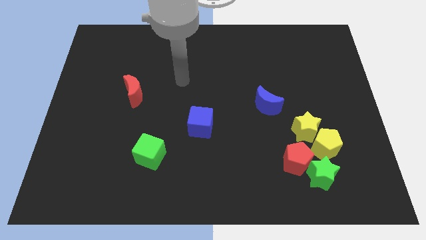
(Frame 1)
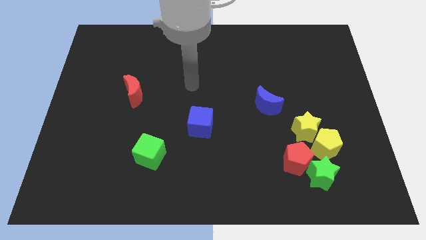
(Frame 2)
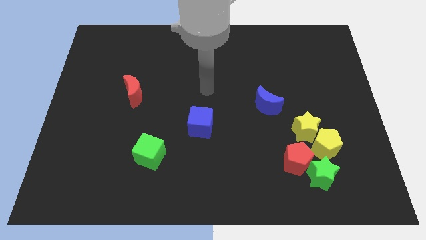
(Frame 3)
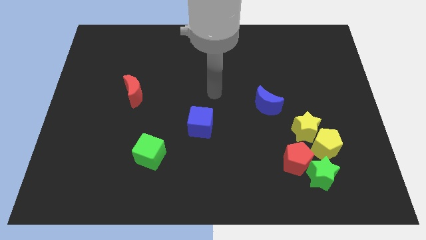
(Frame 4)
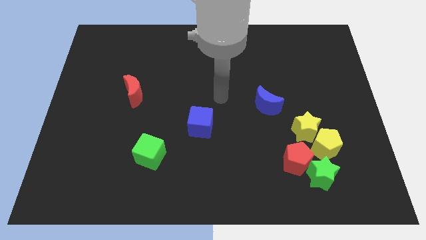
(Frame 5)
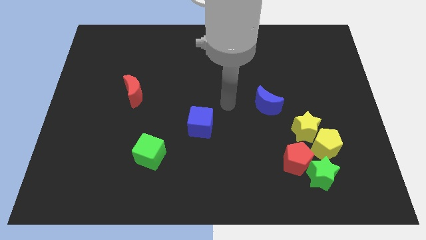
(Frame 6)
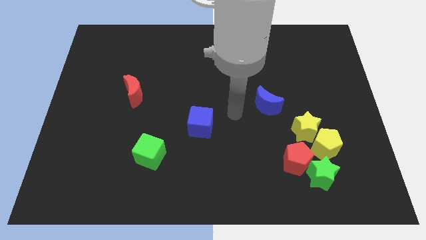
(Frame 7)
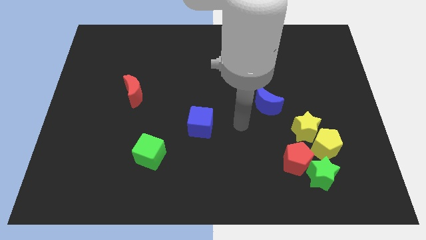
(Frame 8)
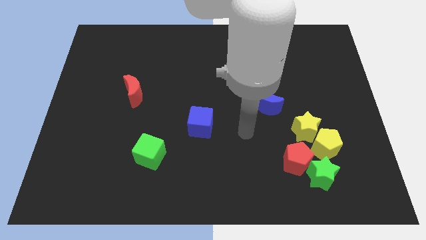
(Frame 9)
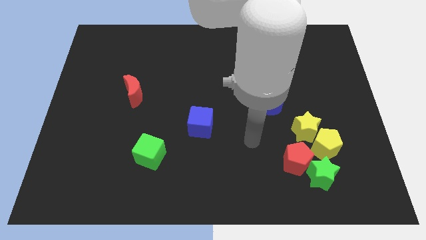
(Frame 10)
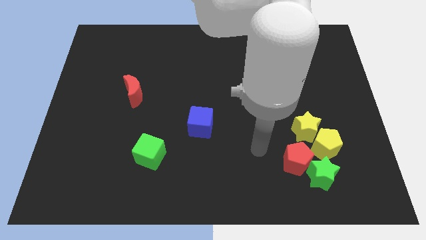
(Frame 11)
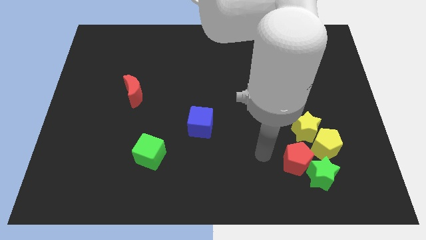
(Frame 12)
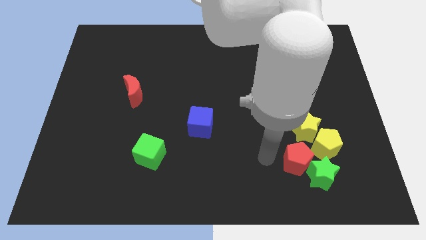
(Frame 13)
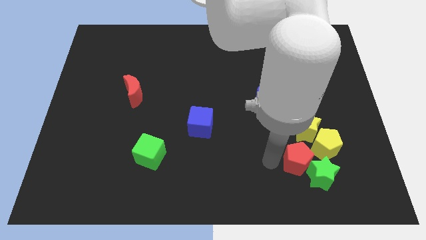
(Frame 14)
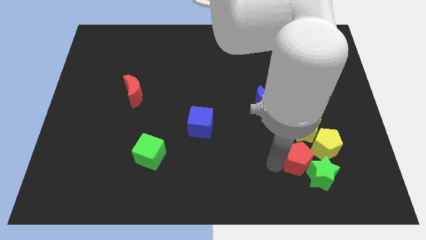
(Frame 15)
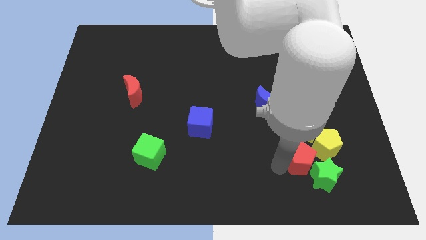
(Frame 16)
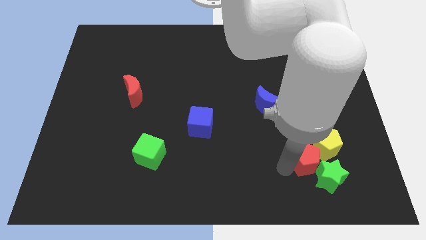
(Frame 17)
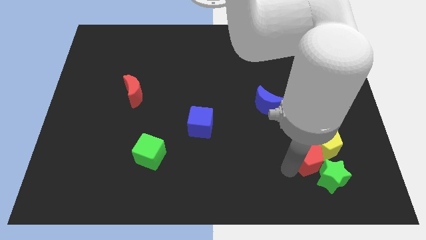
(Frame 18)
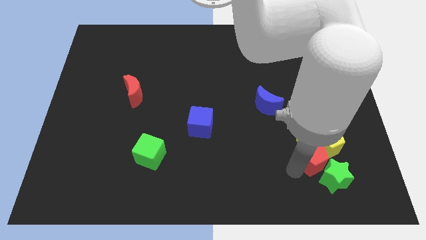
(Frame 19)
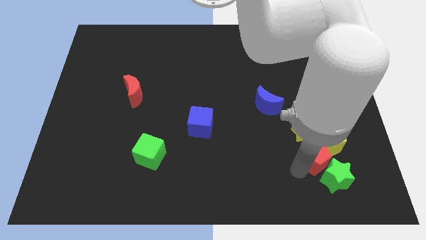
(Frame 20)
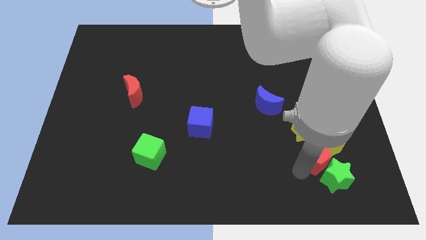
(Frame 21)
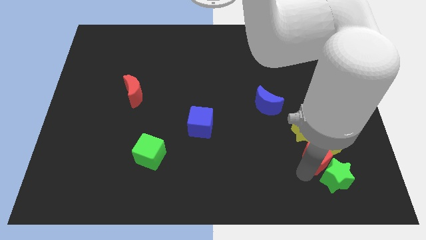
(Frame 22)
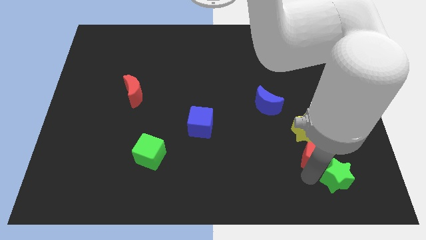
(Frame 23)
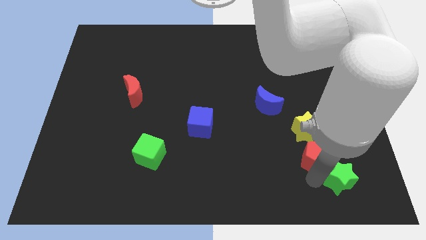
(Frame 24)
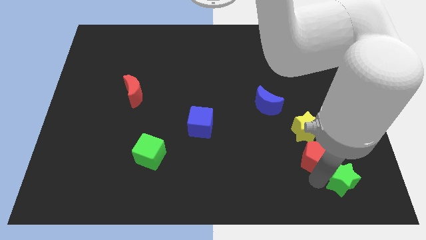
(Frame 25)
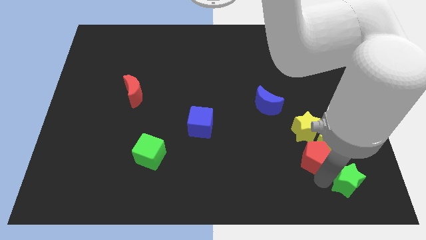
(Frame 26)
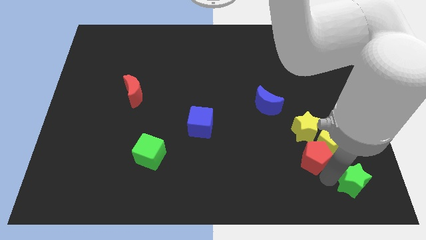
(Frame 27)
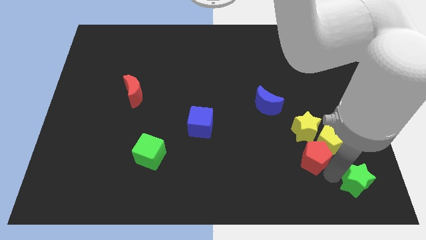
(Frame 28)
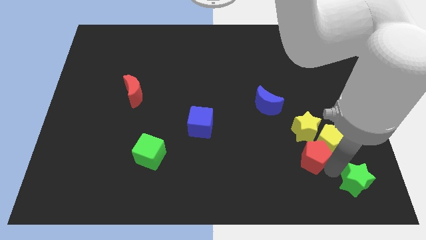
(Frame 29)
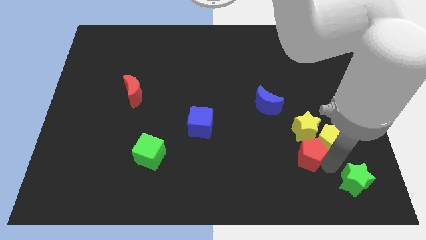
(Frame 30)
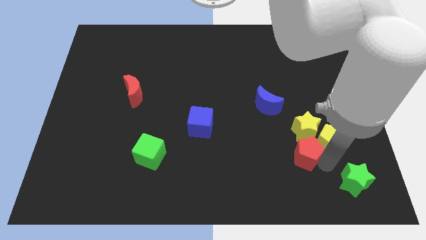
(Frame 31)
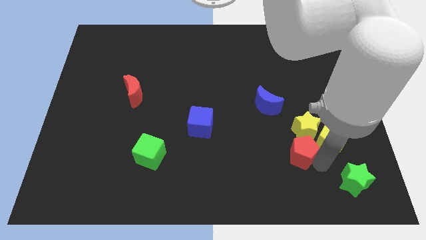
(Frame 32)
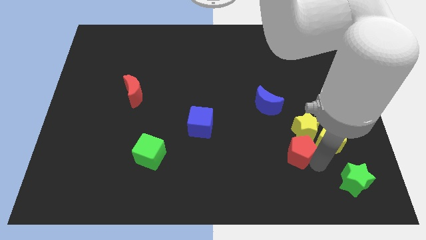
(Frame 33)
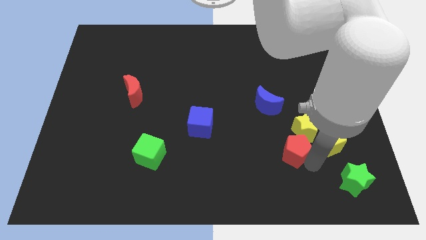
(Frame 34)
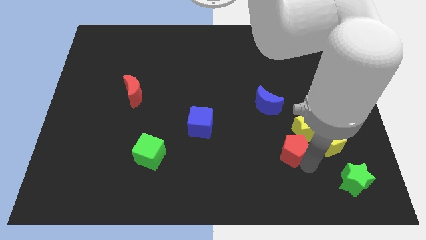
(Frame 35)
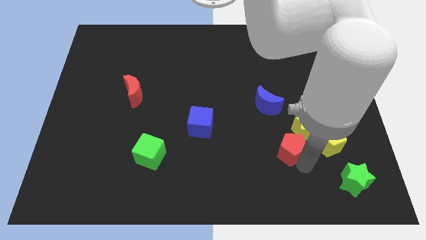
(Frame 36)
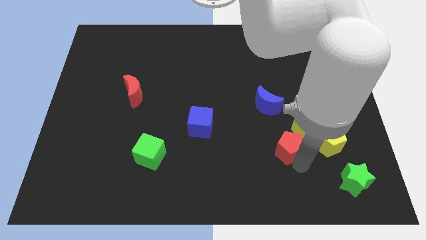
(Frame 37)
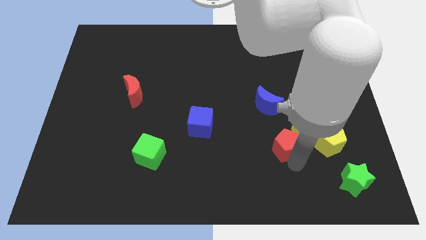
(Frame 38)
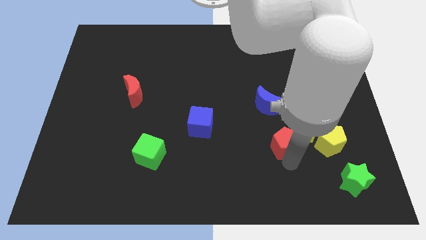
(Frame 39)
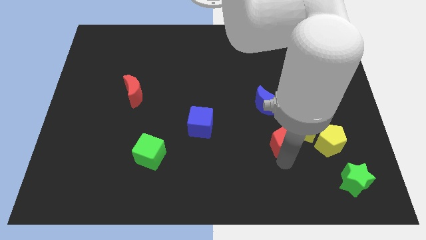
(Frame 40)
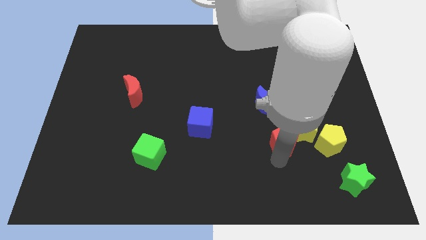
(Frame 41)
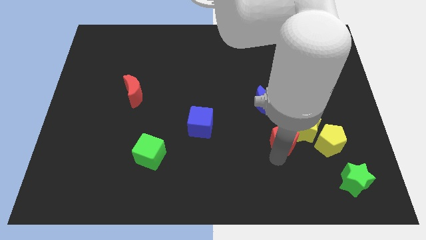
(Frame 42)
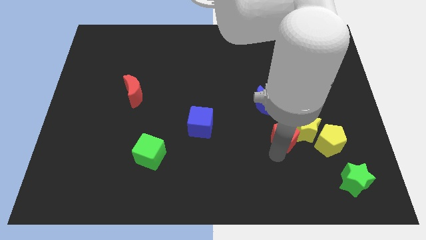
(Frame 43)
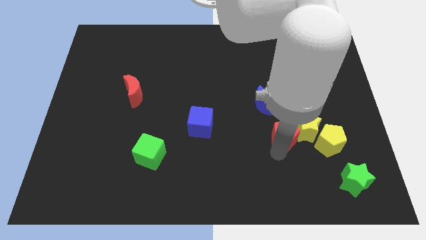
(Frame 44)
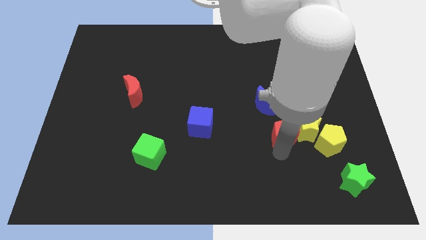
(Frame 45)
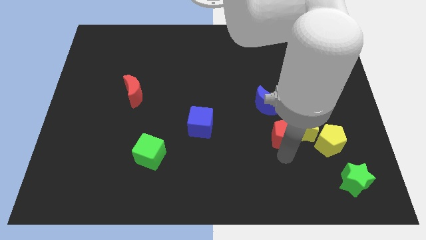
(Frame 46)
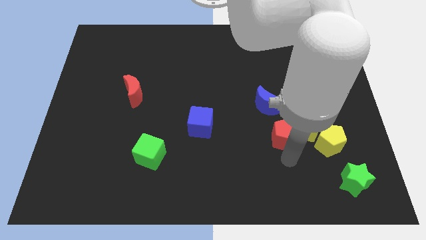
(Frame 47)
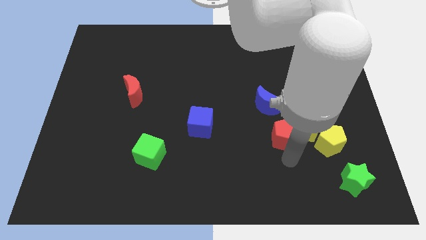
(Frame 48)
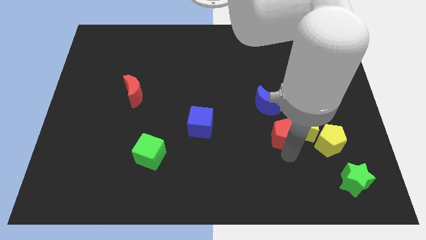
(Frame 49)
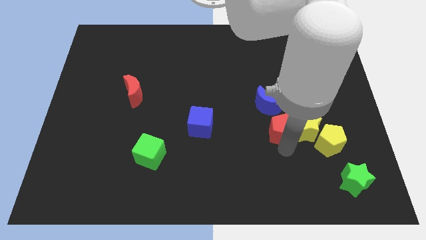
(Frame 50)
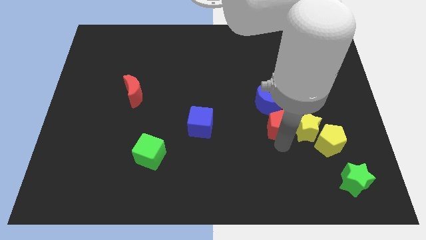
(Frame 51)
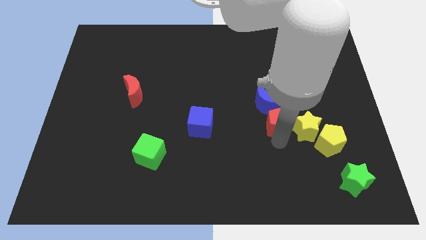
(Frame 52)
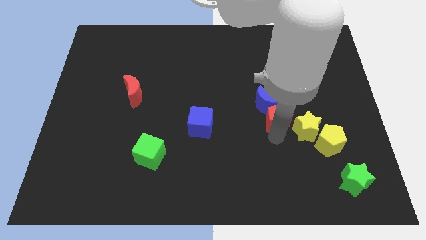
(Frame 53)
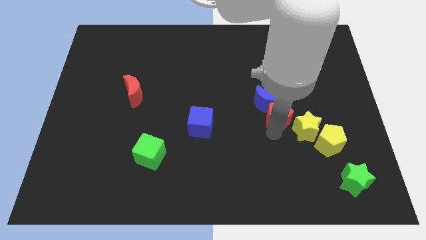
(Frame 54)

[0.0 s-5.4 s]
slide the red pentagon to the blue moon

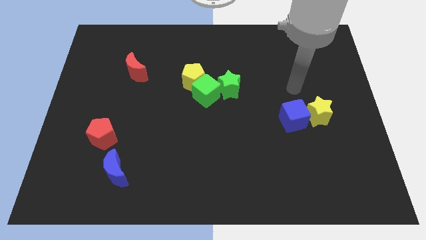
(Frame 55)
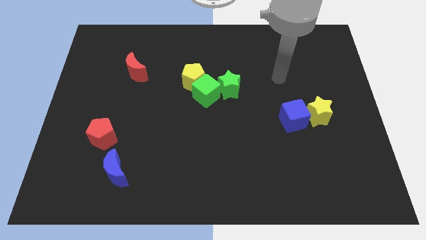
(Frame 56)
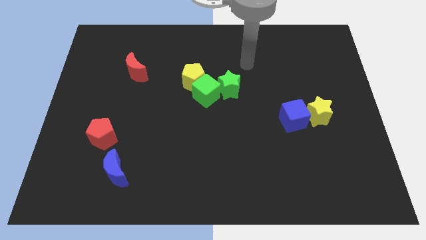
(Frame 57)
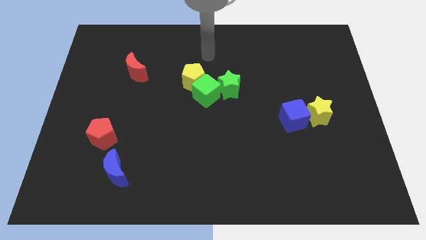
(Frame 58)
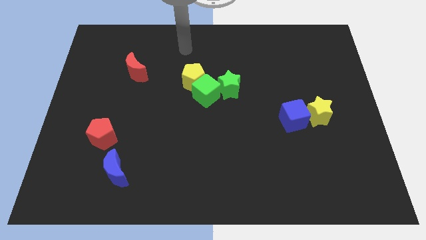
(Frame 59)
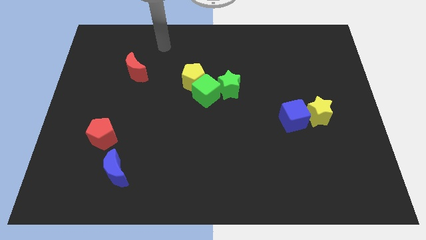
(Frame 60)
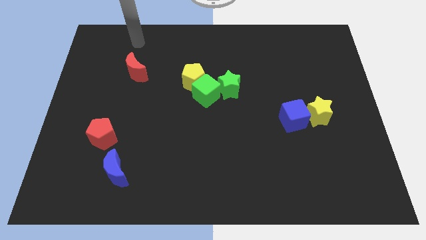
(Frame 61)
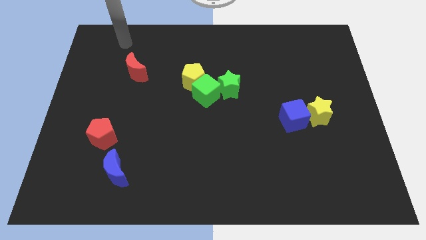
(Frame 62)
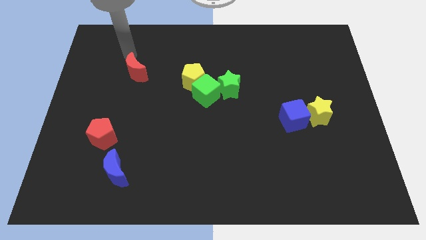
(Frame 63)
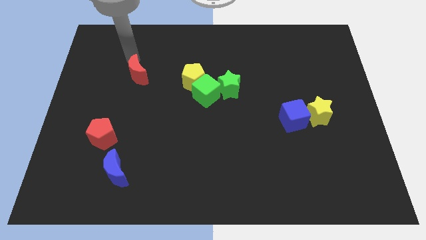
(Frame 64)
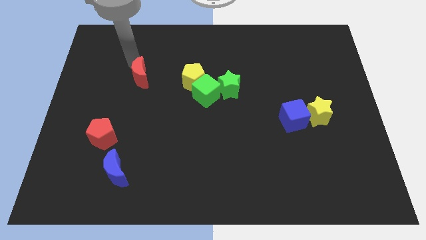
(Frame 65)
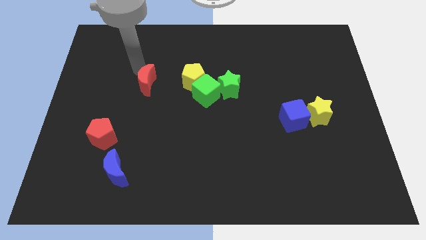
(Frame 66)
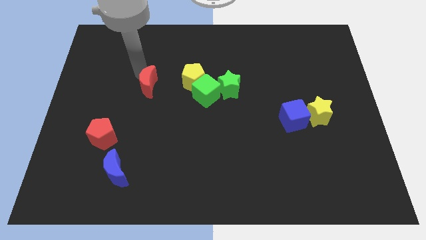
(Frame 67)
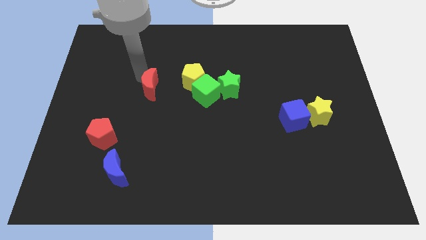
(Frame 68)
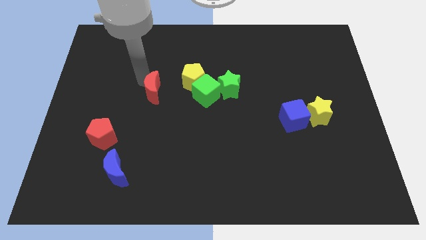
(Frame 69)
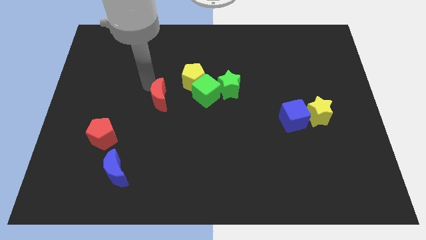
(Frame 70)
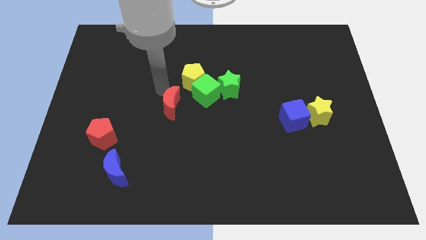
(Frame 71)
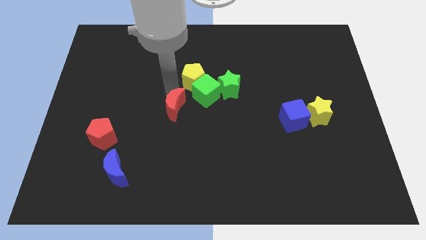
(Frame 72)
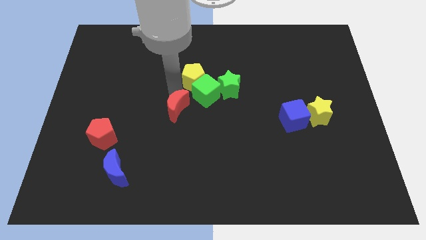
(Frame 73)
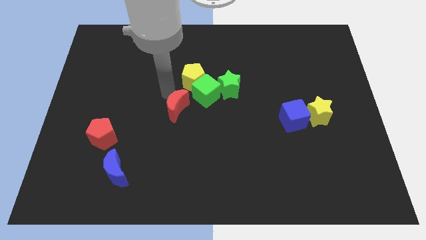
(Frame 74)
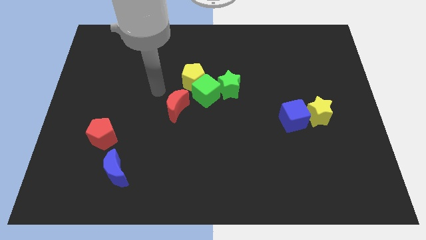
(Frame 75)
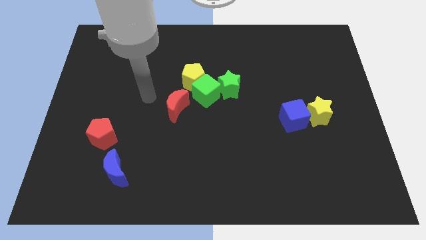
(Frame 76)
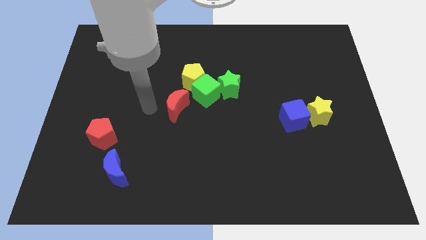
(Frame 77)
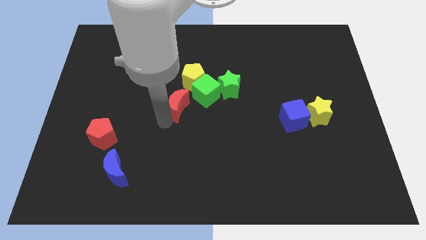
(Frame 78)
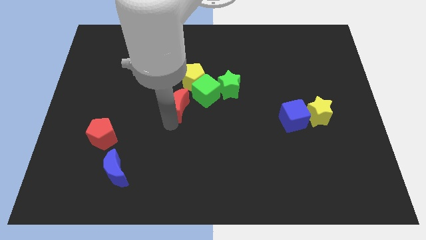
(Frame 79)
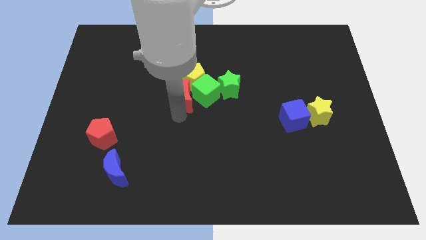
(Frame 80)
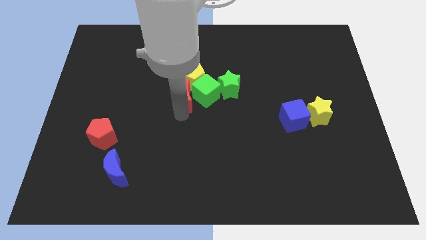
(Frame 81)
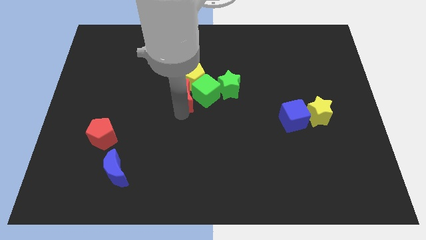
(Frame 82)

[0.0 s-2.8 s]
slide the red moon towards the green cube

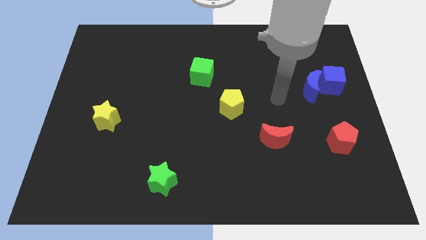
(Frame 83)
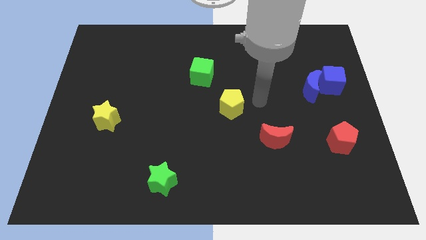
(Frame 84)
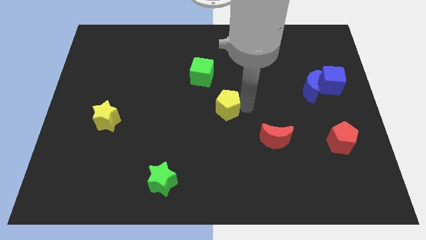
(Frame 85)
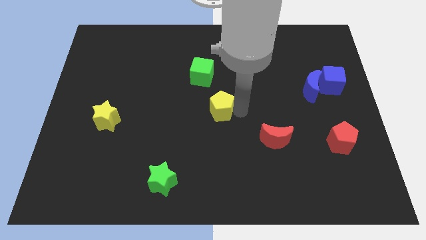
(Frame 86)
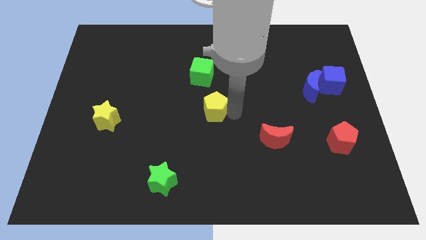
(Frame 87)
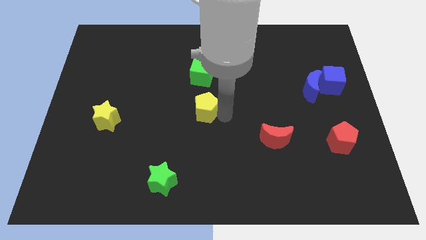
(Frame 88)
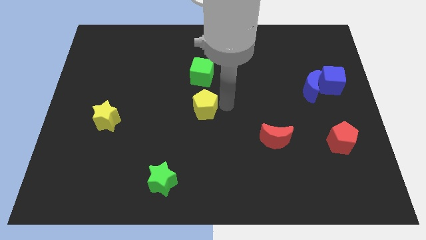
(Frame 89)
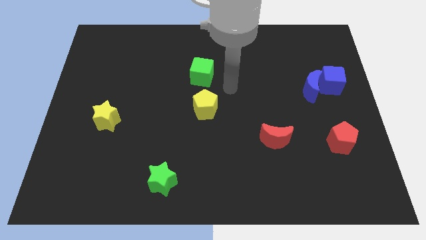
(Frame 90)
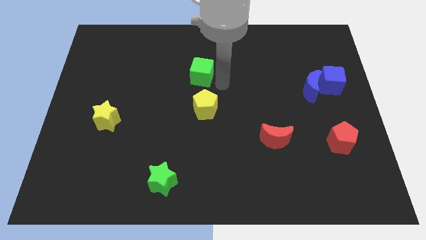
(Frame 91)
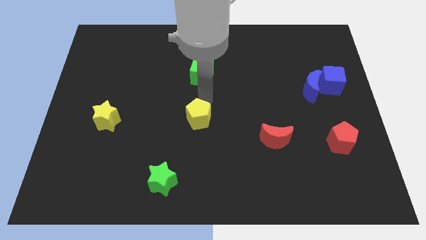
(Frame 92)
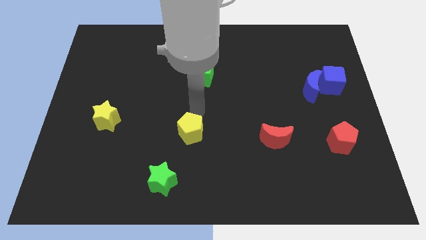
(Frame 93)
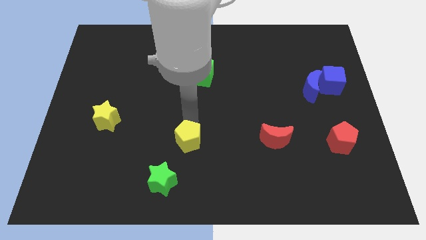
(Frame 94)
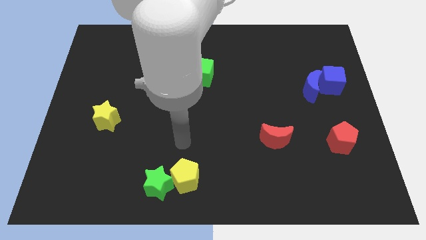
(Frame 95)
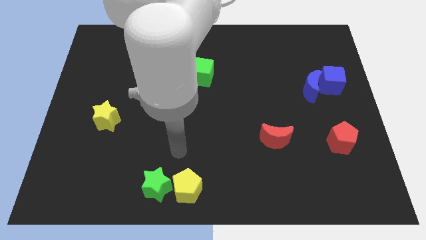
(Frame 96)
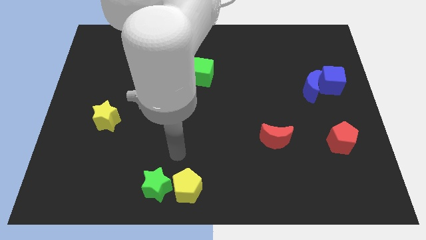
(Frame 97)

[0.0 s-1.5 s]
push the yellow pentagon towards the green star
